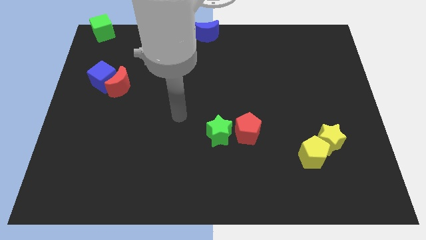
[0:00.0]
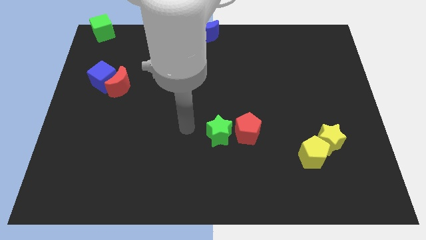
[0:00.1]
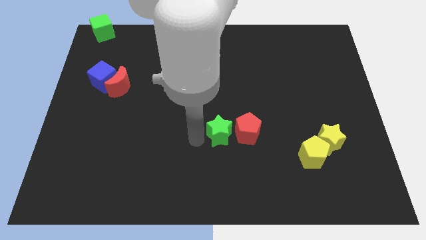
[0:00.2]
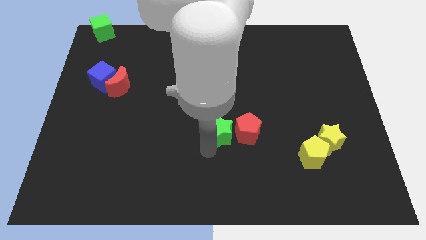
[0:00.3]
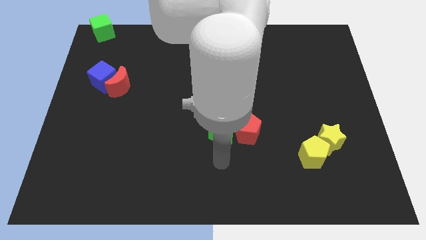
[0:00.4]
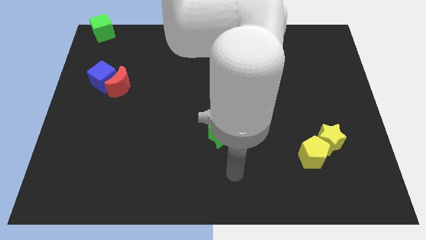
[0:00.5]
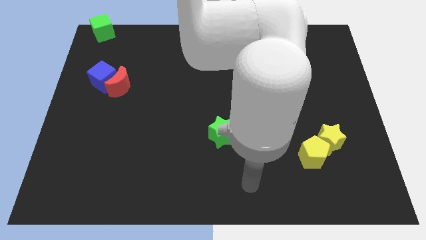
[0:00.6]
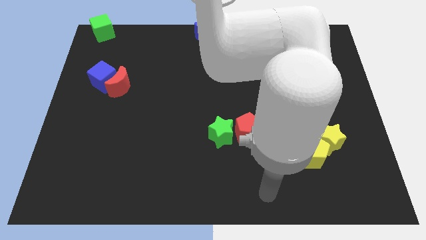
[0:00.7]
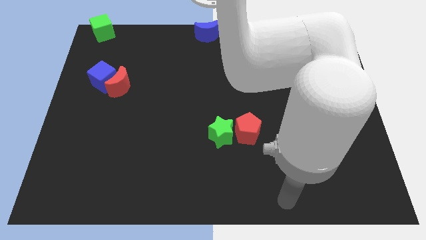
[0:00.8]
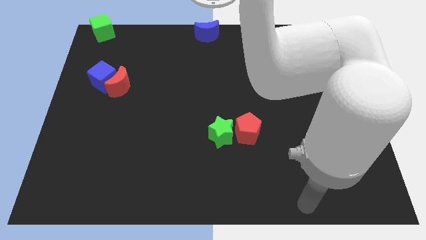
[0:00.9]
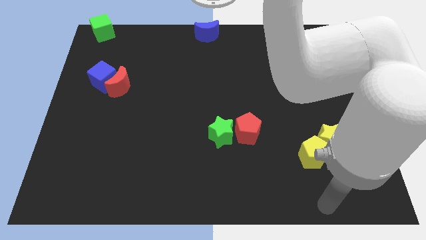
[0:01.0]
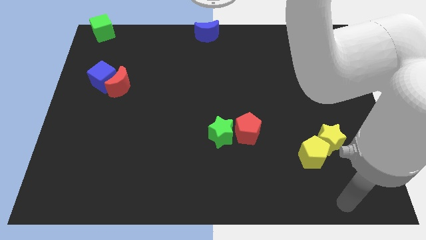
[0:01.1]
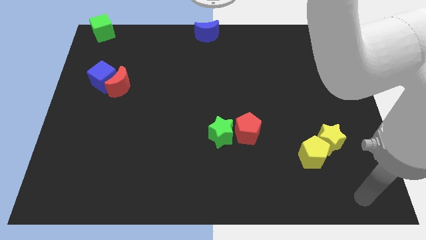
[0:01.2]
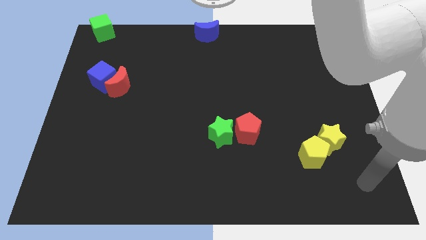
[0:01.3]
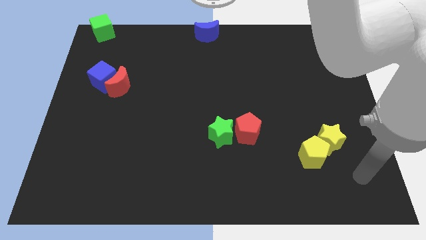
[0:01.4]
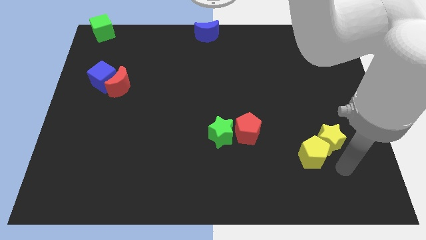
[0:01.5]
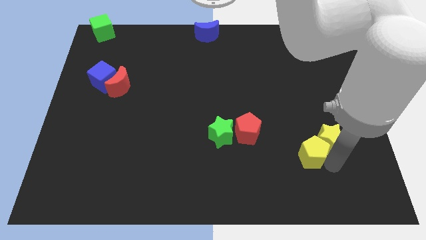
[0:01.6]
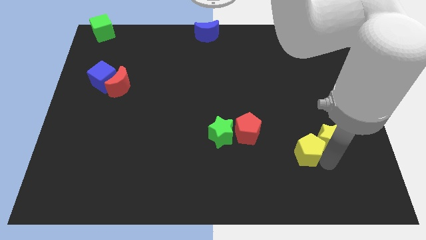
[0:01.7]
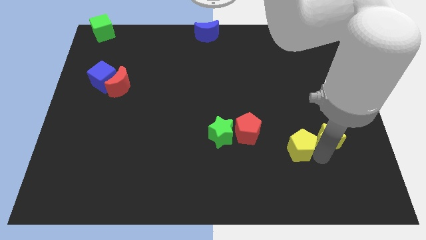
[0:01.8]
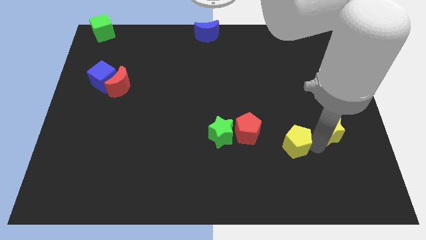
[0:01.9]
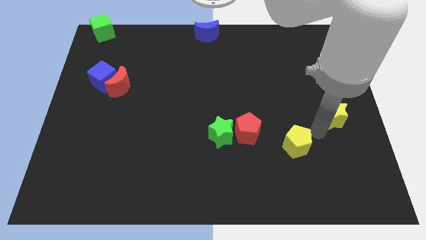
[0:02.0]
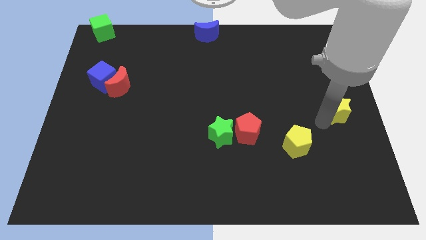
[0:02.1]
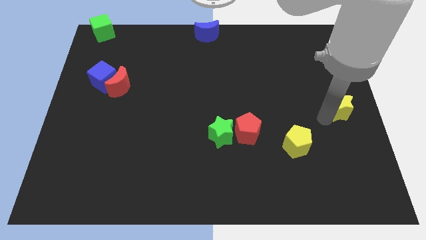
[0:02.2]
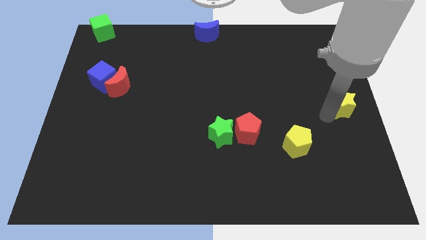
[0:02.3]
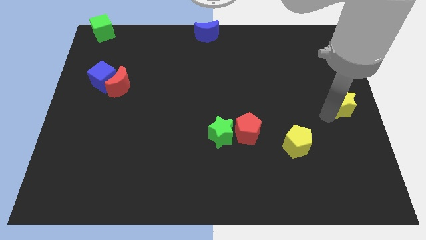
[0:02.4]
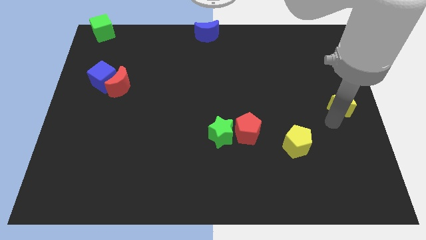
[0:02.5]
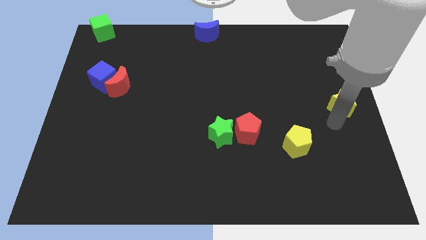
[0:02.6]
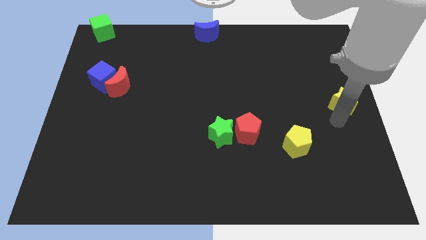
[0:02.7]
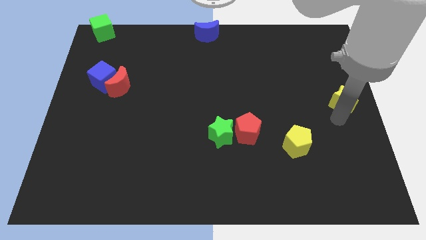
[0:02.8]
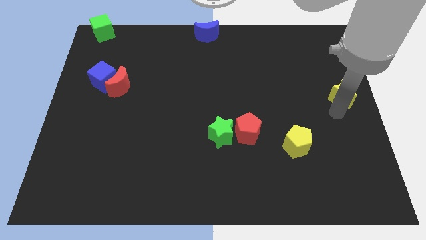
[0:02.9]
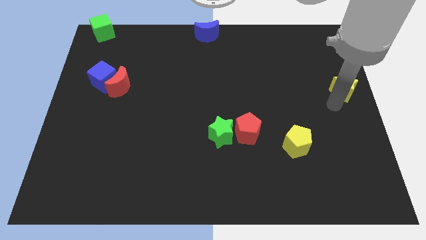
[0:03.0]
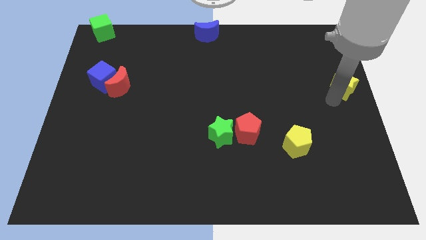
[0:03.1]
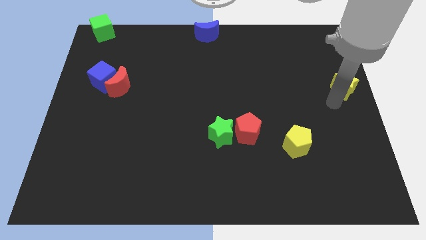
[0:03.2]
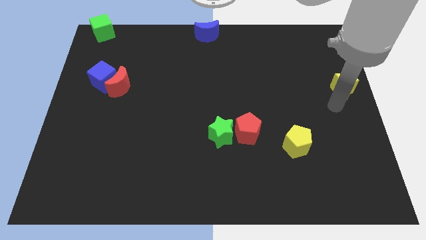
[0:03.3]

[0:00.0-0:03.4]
separate the yellow star from the yellow pentagon

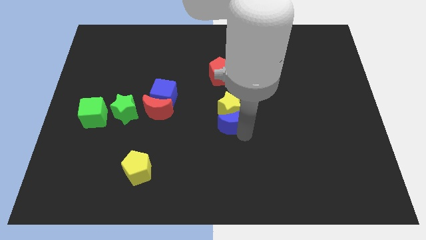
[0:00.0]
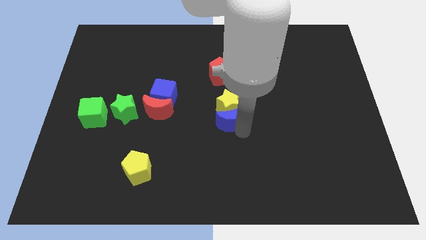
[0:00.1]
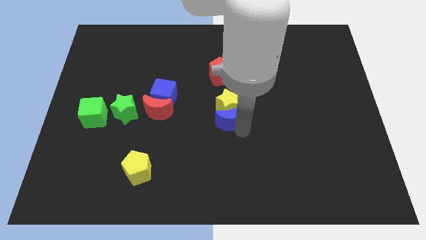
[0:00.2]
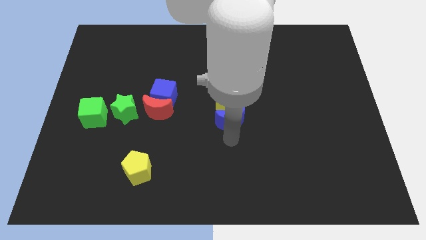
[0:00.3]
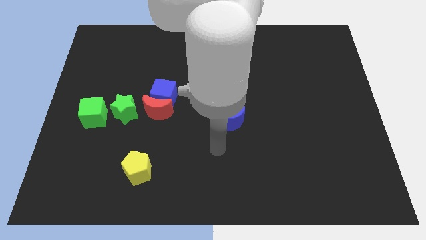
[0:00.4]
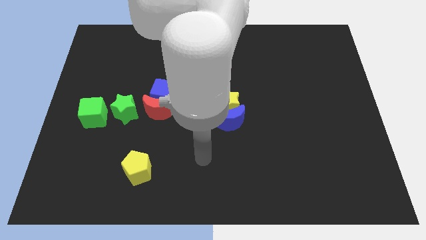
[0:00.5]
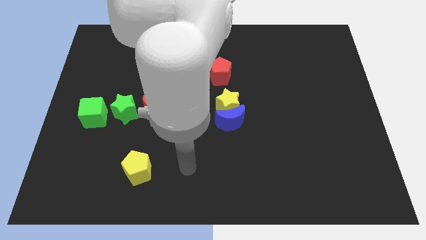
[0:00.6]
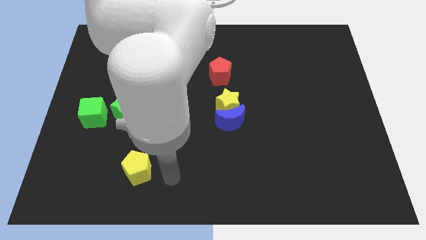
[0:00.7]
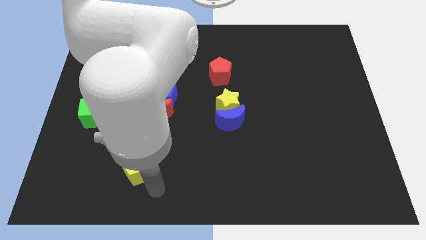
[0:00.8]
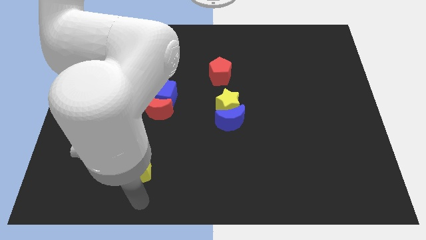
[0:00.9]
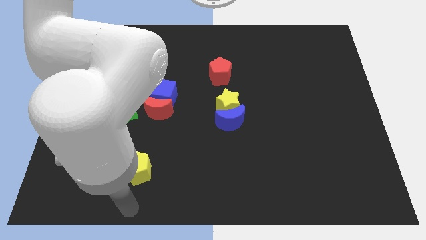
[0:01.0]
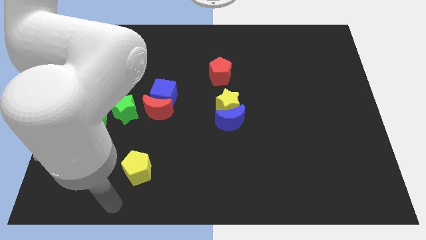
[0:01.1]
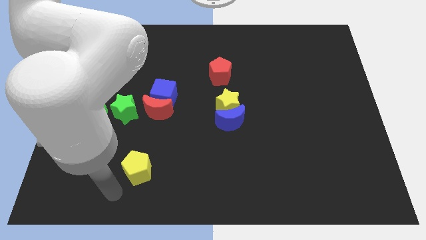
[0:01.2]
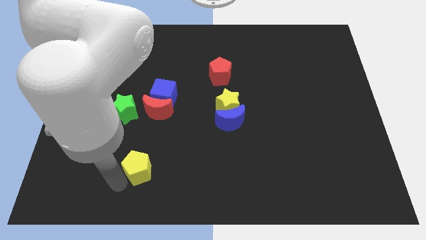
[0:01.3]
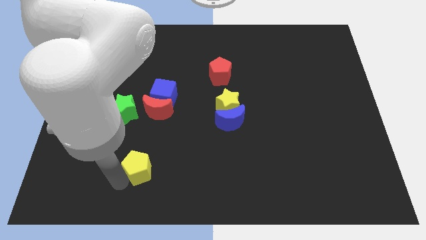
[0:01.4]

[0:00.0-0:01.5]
place the arm near the yellow pentagon

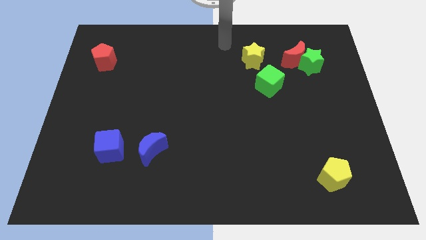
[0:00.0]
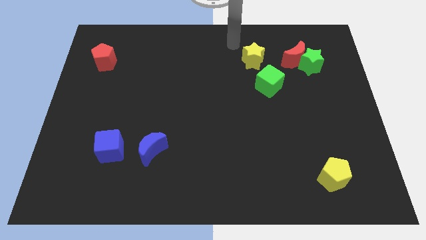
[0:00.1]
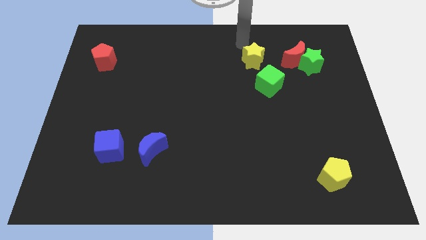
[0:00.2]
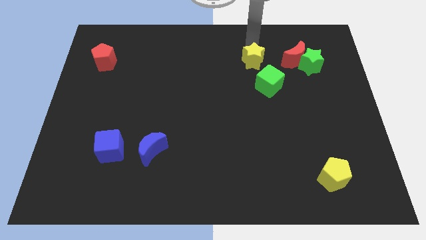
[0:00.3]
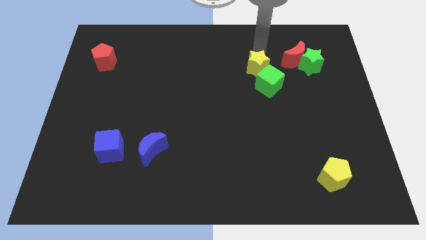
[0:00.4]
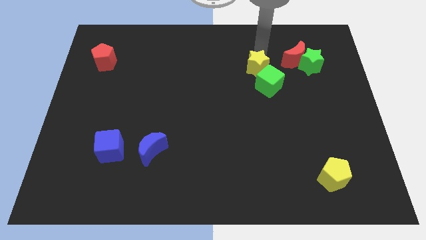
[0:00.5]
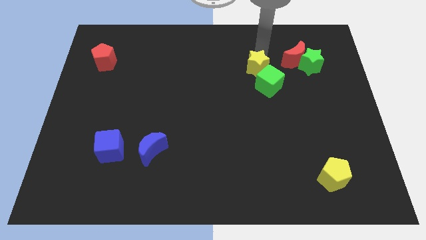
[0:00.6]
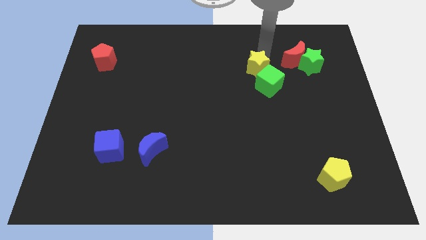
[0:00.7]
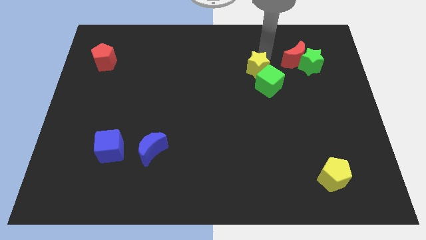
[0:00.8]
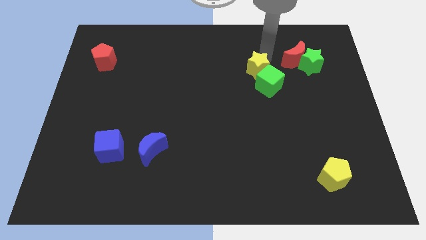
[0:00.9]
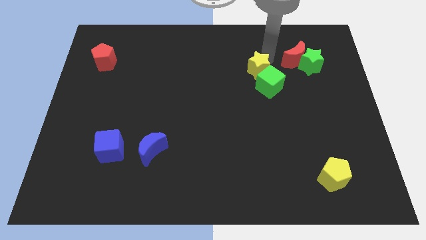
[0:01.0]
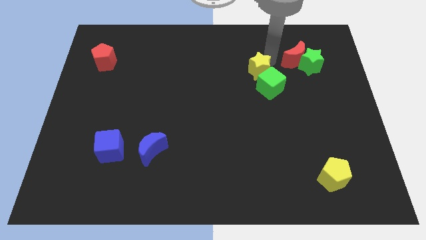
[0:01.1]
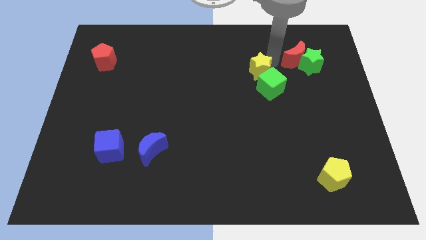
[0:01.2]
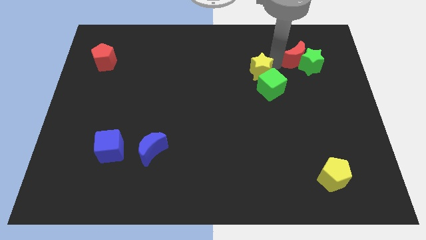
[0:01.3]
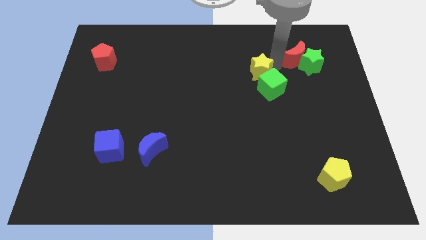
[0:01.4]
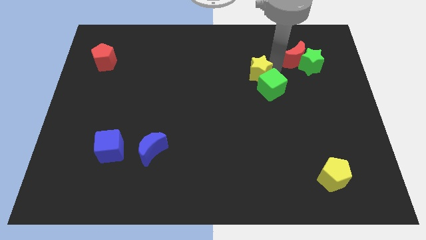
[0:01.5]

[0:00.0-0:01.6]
attach the yellow star and the green cube

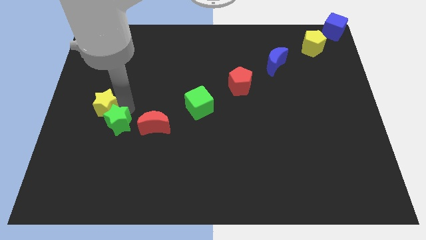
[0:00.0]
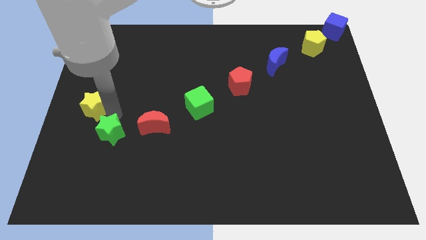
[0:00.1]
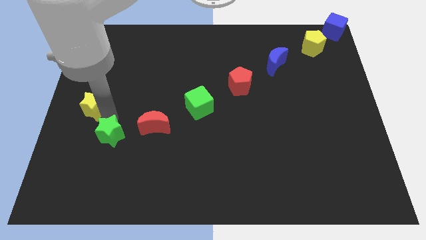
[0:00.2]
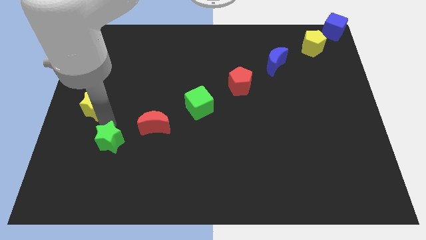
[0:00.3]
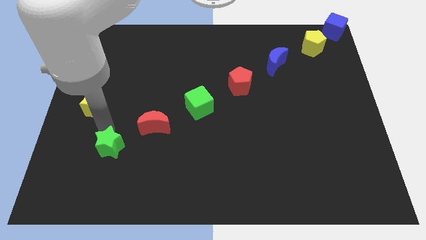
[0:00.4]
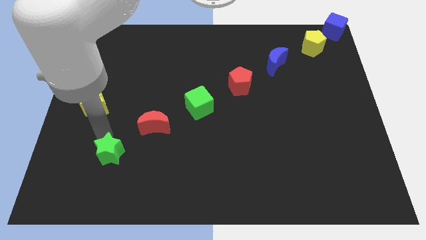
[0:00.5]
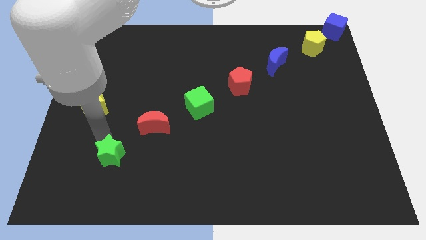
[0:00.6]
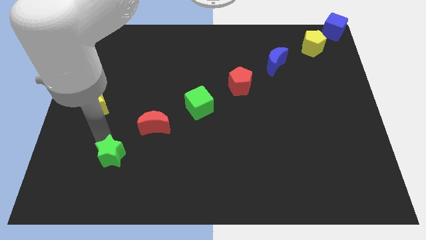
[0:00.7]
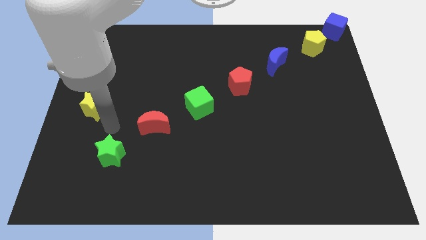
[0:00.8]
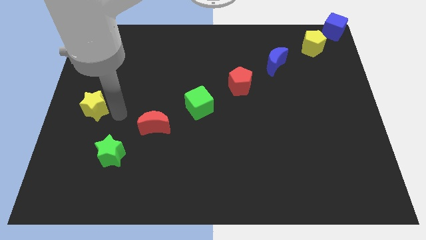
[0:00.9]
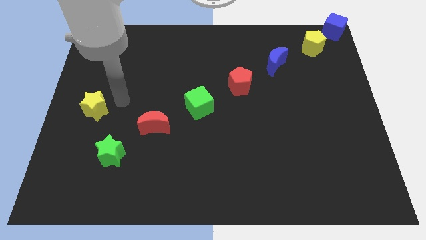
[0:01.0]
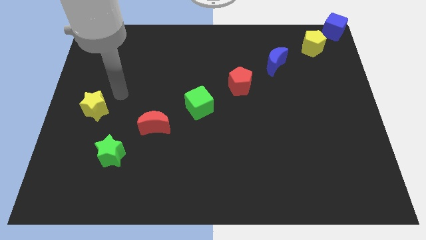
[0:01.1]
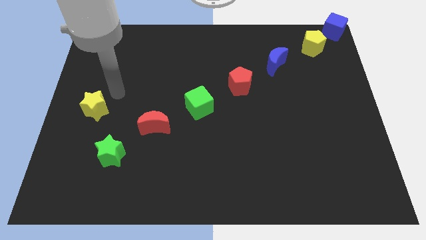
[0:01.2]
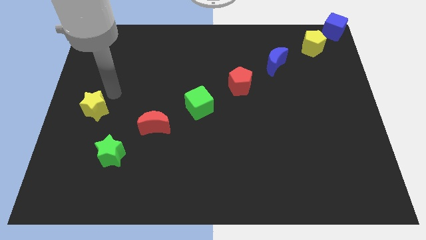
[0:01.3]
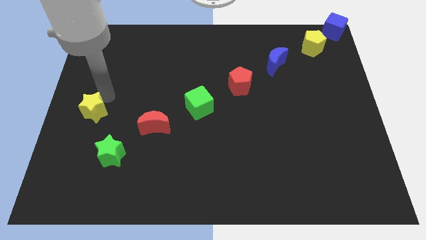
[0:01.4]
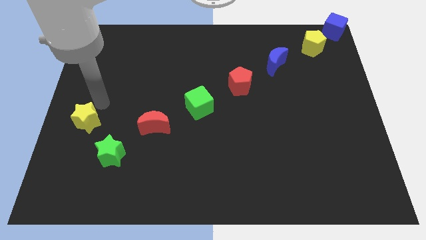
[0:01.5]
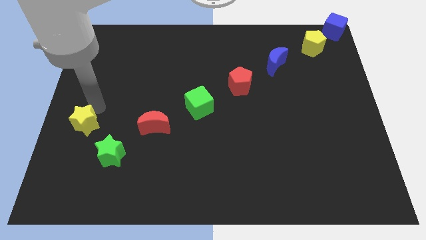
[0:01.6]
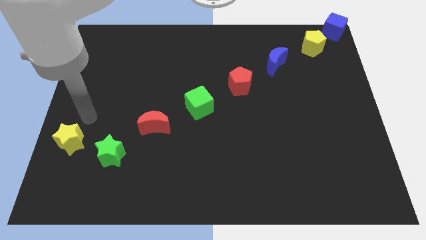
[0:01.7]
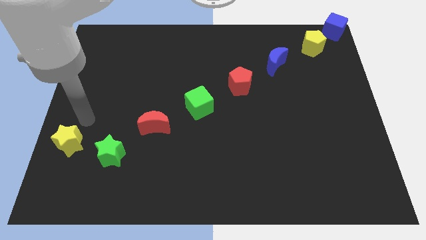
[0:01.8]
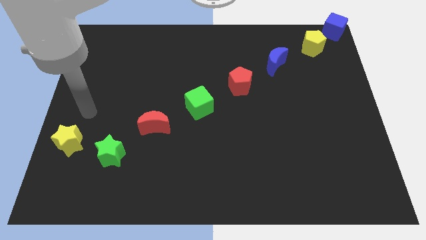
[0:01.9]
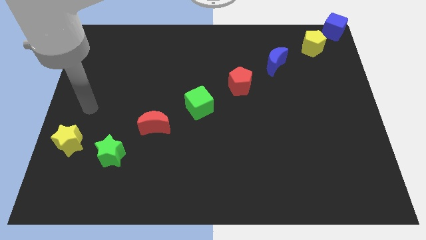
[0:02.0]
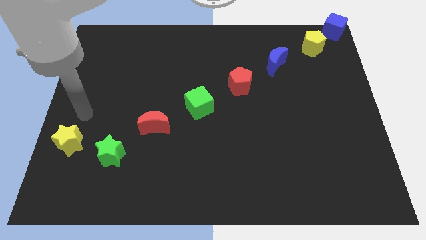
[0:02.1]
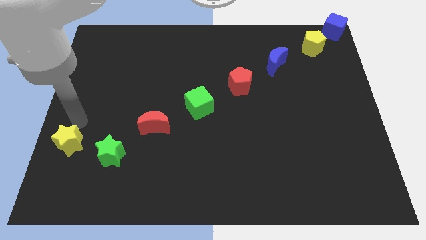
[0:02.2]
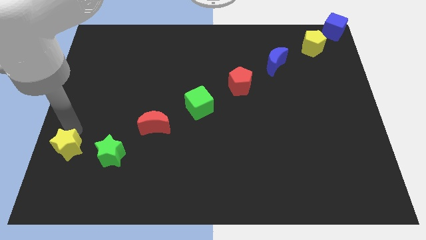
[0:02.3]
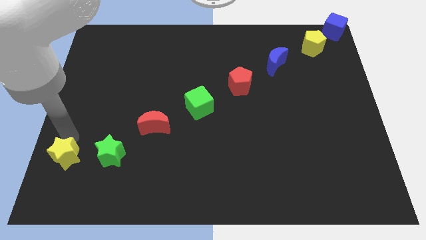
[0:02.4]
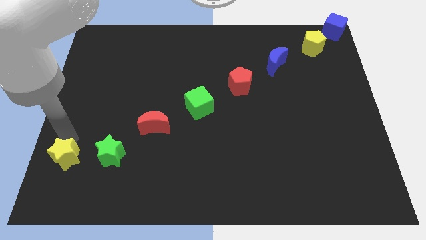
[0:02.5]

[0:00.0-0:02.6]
place the yellow star towards the left side of the green star
